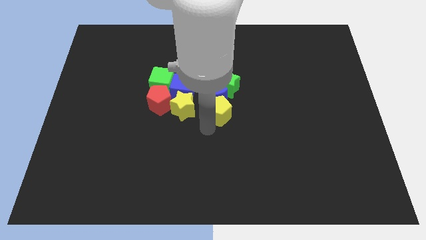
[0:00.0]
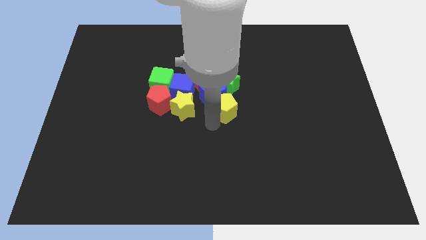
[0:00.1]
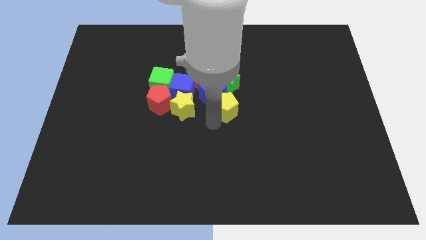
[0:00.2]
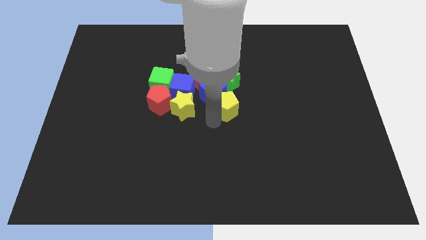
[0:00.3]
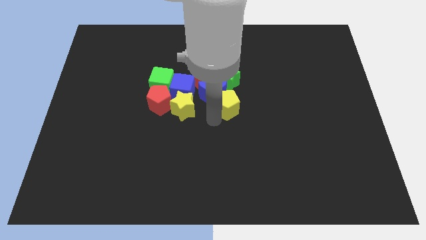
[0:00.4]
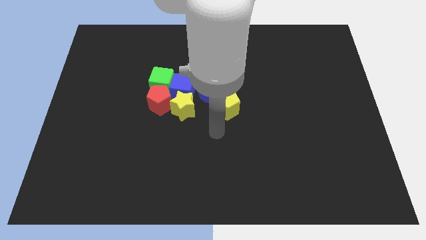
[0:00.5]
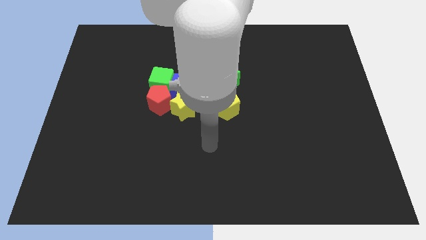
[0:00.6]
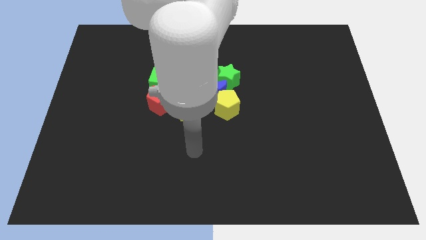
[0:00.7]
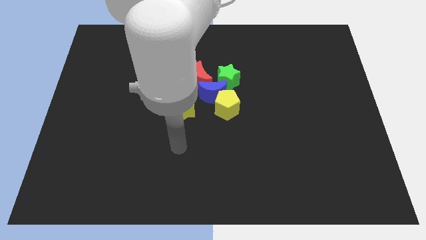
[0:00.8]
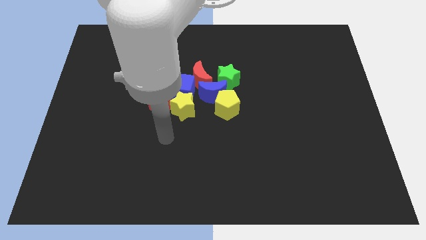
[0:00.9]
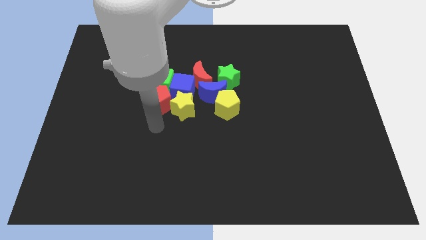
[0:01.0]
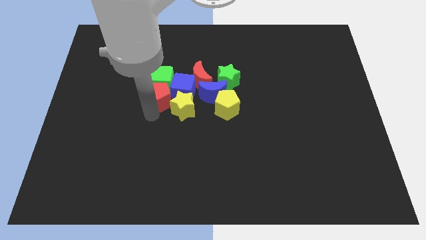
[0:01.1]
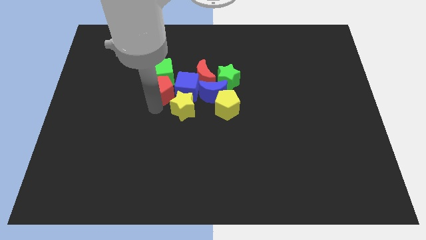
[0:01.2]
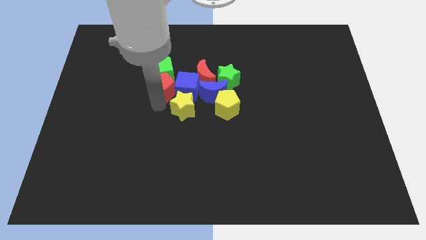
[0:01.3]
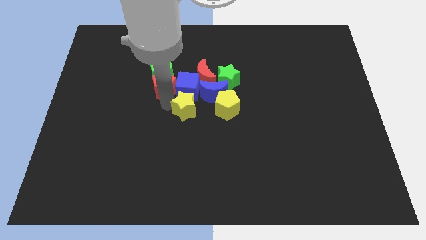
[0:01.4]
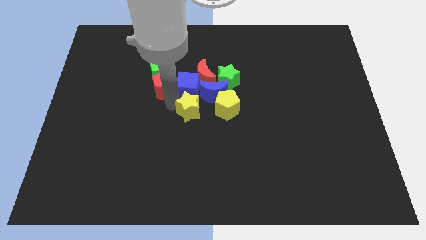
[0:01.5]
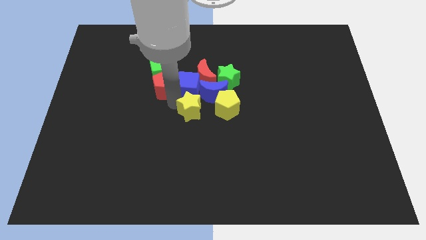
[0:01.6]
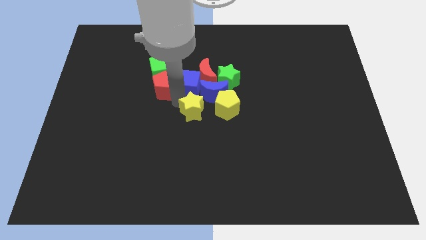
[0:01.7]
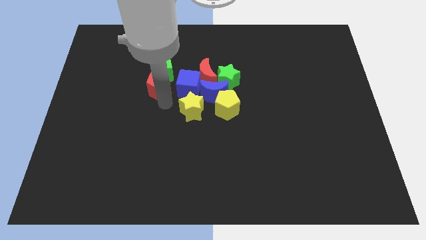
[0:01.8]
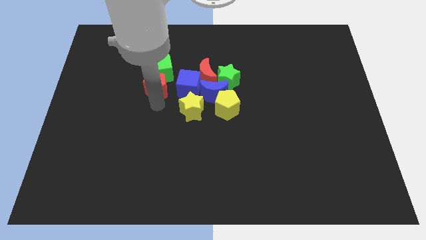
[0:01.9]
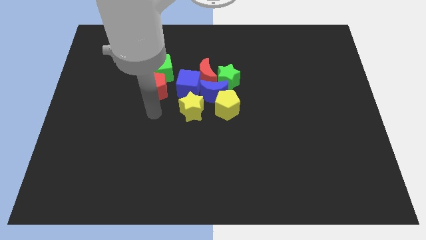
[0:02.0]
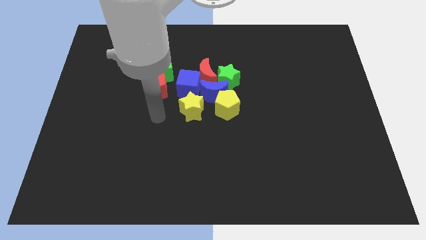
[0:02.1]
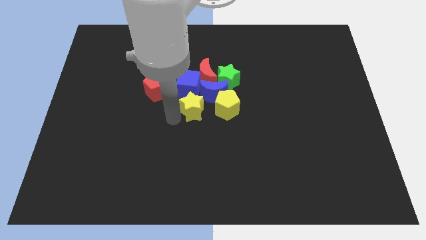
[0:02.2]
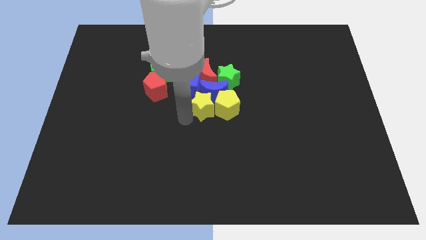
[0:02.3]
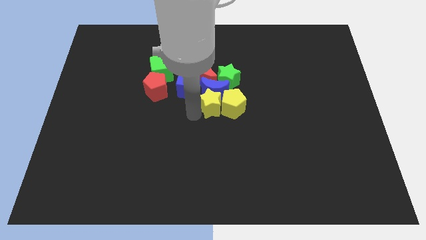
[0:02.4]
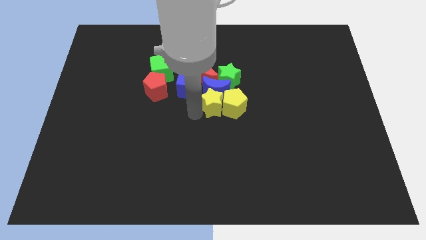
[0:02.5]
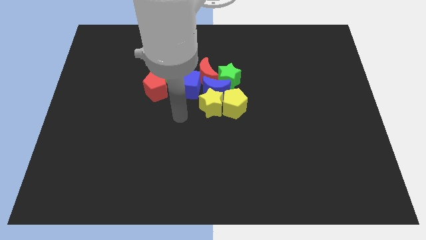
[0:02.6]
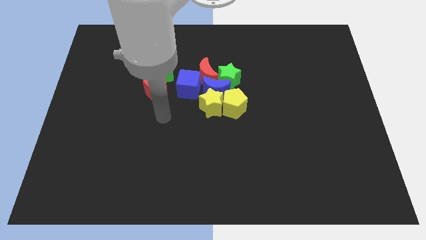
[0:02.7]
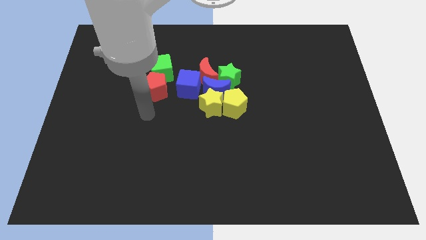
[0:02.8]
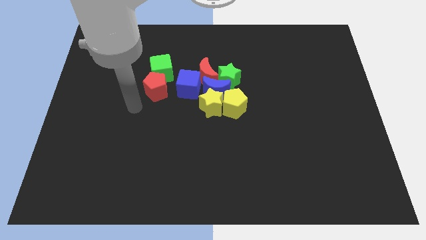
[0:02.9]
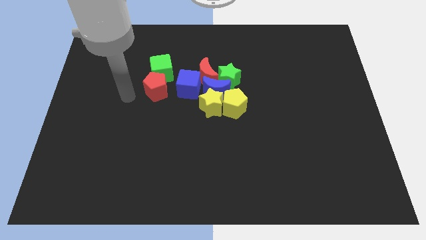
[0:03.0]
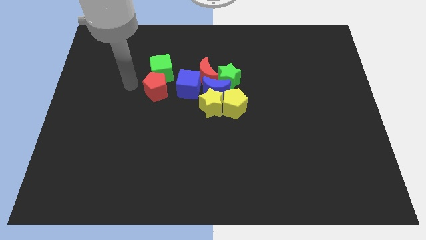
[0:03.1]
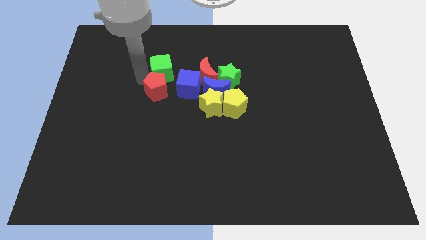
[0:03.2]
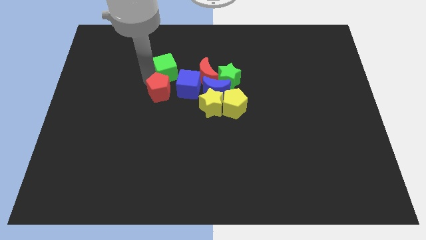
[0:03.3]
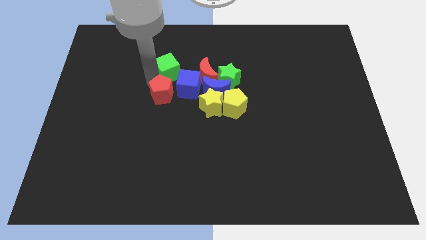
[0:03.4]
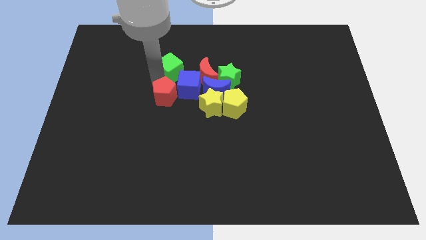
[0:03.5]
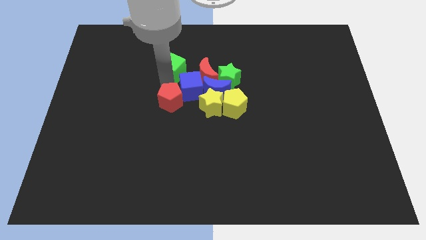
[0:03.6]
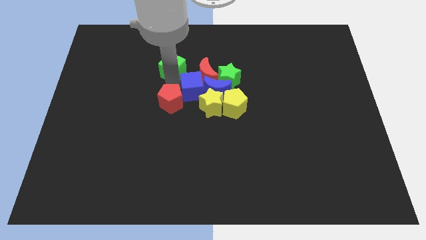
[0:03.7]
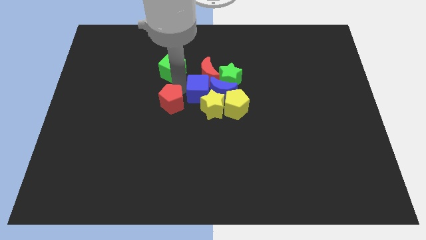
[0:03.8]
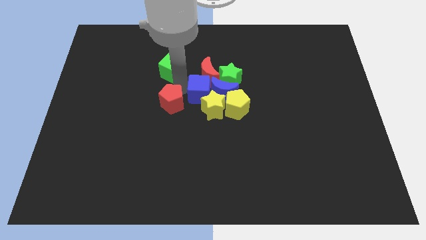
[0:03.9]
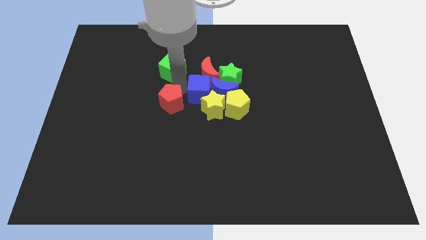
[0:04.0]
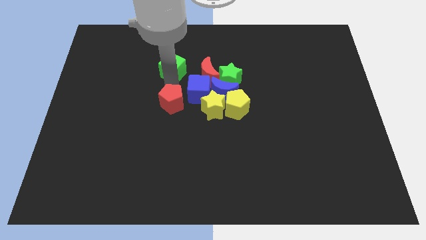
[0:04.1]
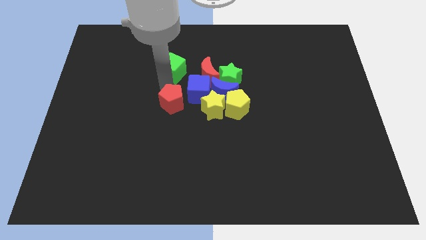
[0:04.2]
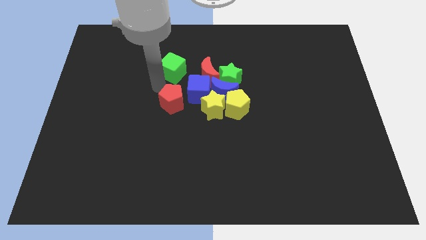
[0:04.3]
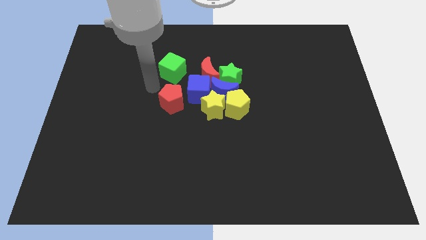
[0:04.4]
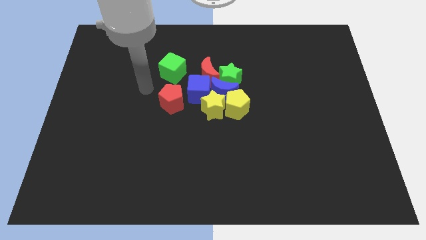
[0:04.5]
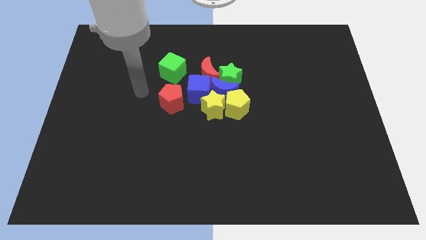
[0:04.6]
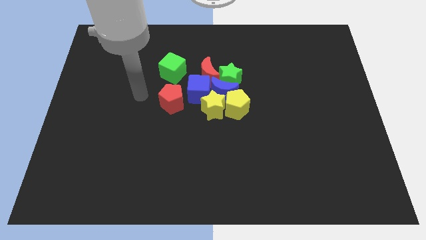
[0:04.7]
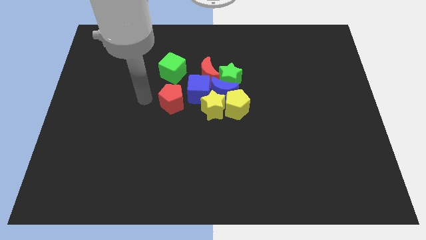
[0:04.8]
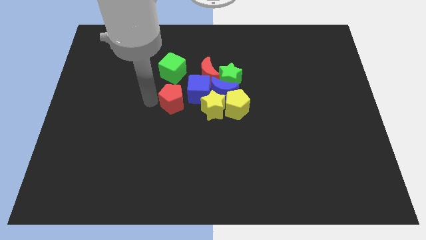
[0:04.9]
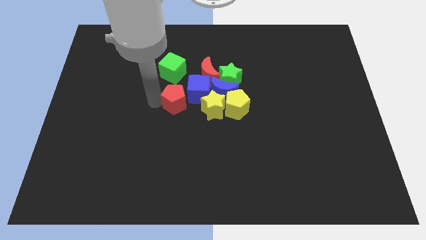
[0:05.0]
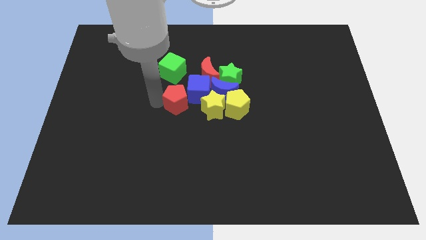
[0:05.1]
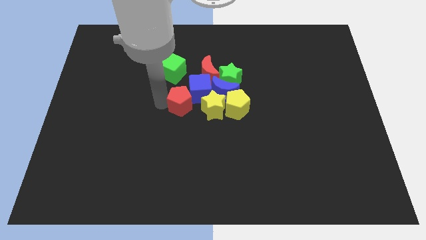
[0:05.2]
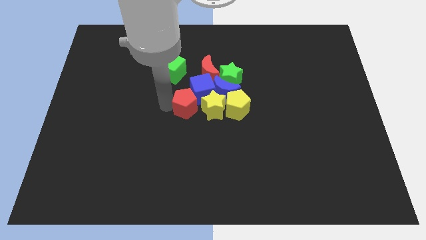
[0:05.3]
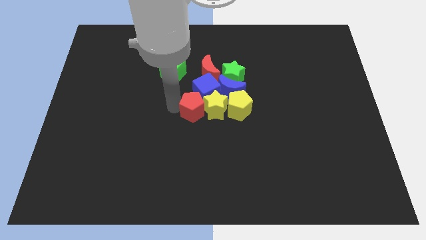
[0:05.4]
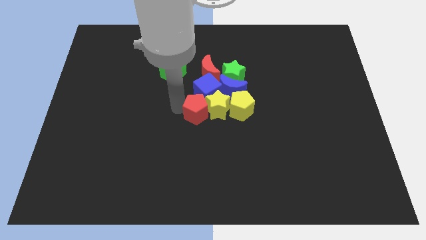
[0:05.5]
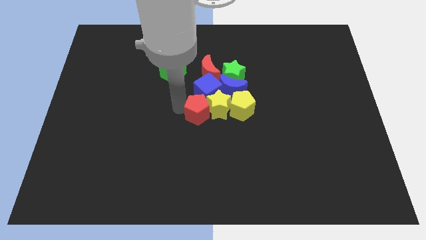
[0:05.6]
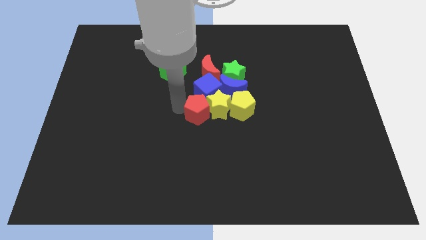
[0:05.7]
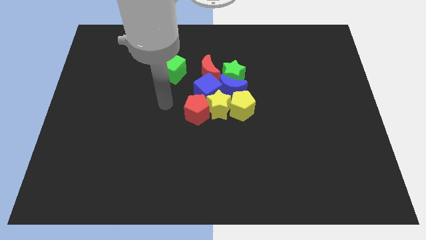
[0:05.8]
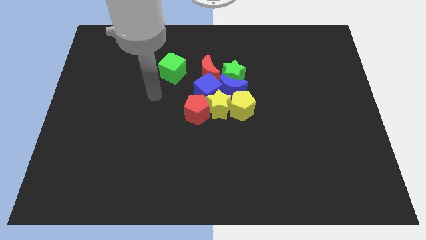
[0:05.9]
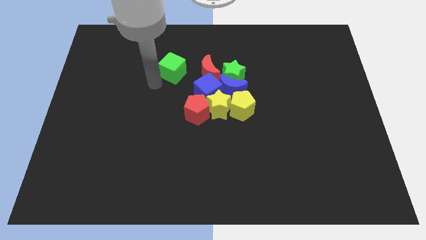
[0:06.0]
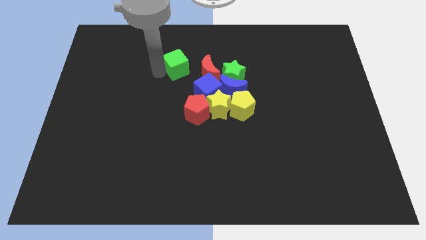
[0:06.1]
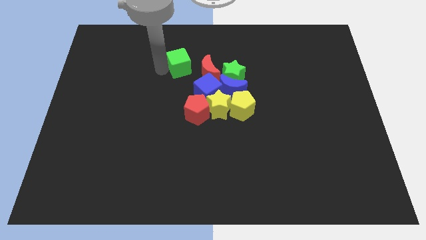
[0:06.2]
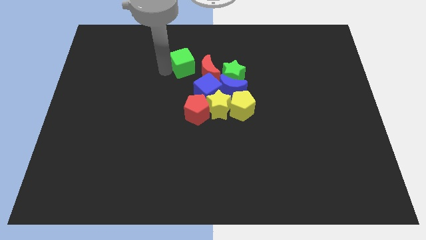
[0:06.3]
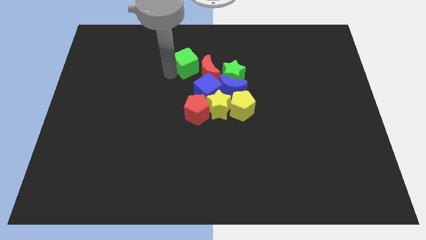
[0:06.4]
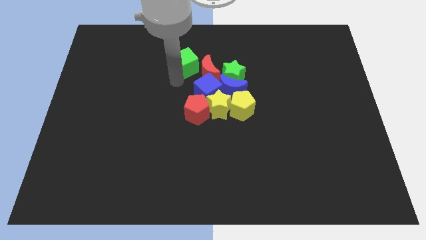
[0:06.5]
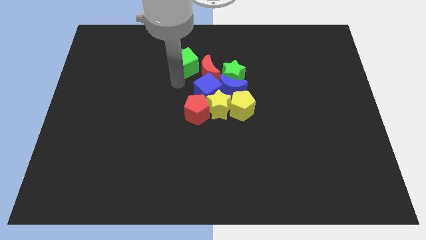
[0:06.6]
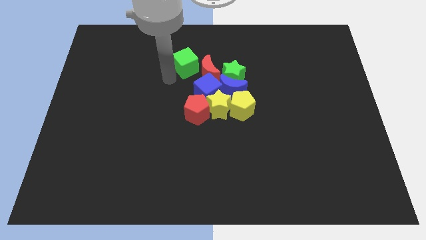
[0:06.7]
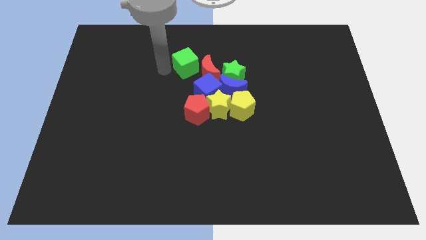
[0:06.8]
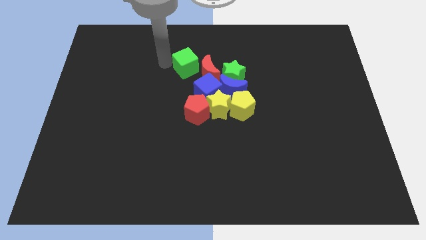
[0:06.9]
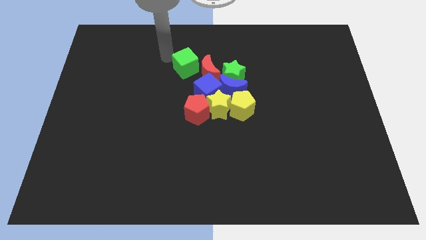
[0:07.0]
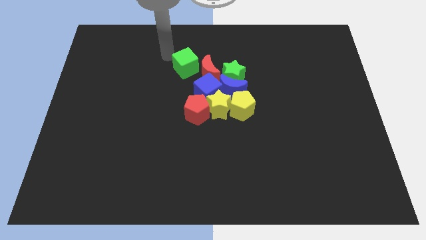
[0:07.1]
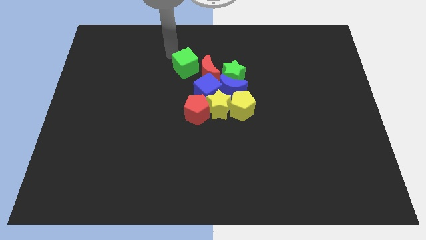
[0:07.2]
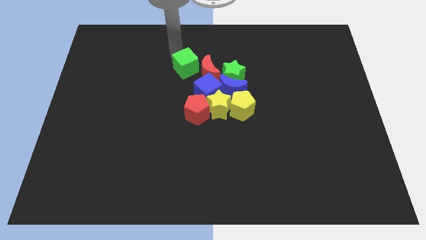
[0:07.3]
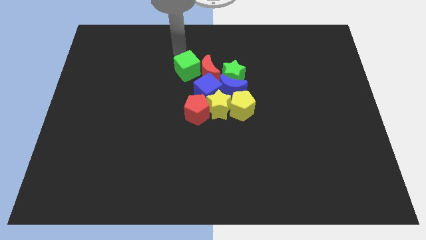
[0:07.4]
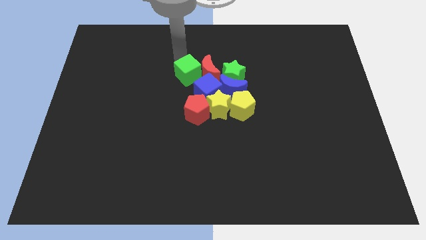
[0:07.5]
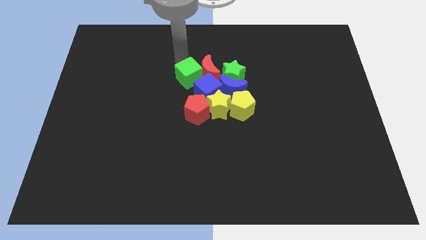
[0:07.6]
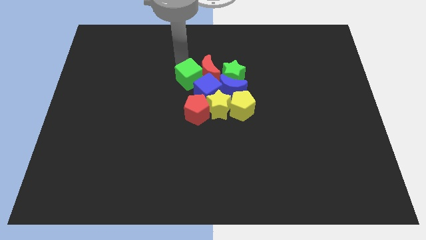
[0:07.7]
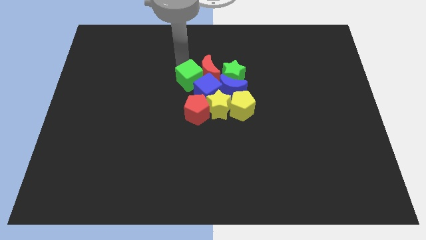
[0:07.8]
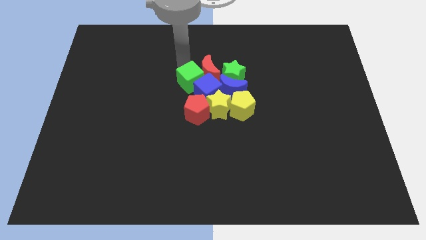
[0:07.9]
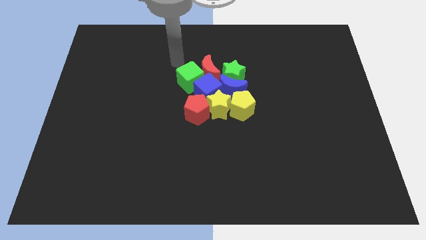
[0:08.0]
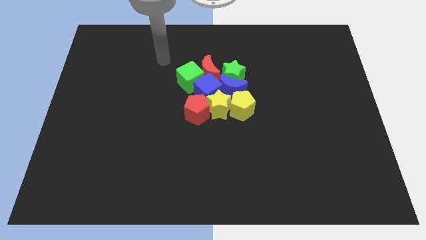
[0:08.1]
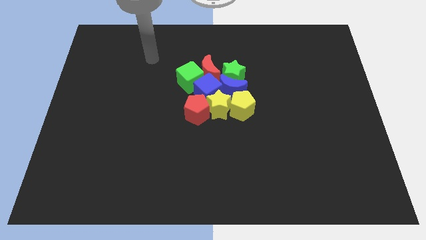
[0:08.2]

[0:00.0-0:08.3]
adjust all the blocks at the center of the board

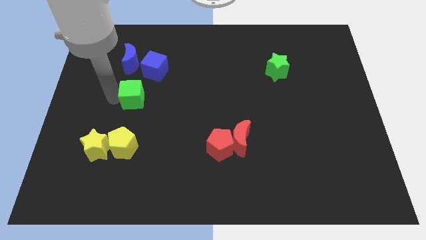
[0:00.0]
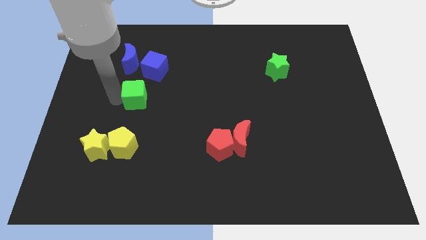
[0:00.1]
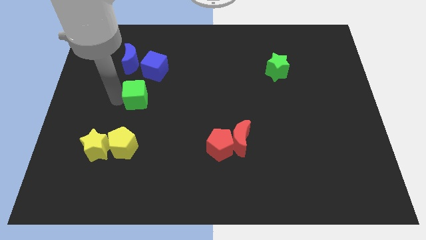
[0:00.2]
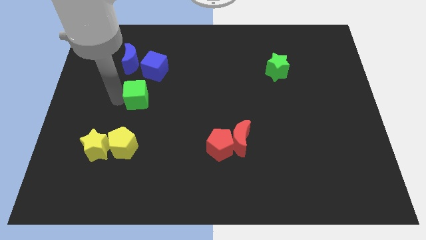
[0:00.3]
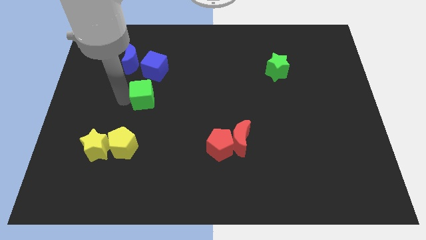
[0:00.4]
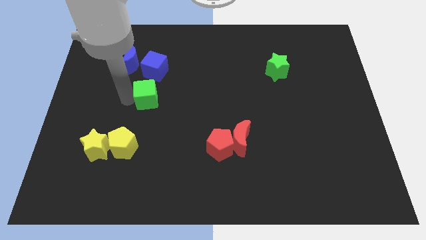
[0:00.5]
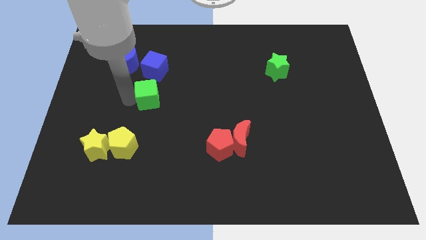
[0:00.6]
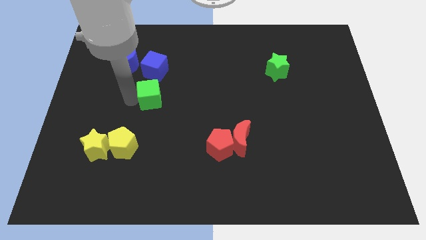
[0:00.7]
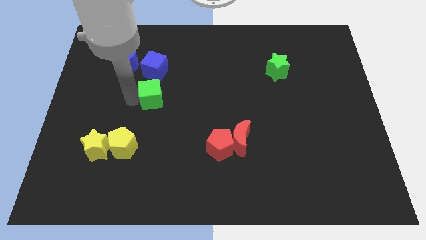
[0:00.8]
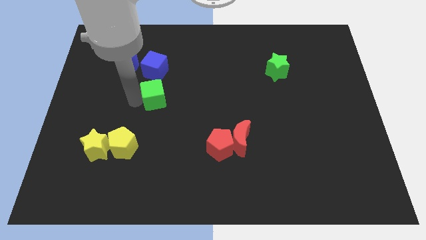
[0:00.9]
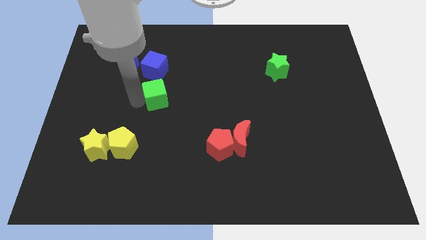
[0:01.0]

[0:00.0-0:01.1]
push the green cube to the bottom of the blue cube
